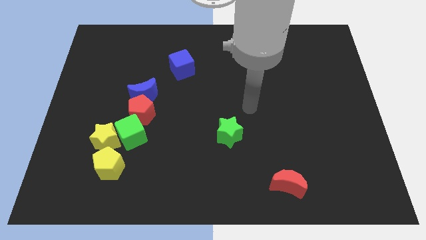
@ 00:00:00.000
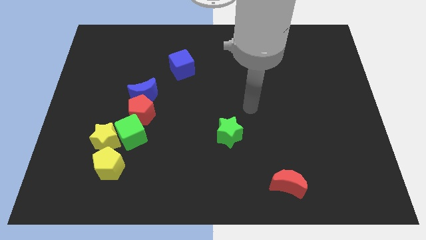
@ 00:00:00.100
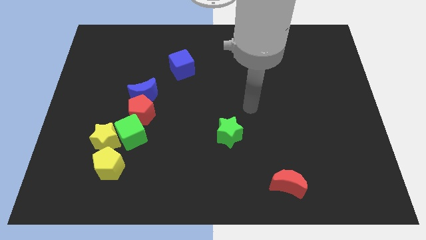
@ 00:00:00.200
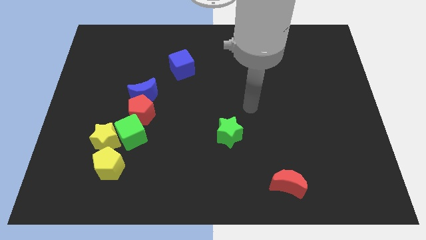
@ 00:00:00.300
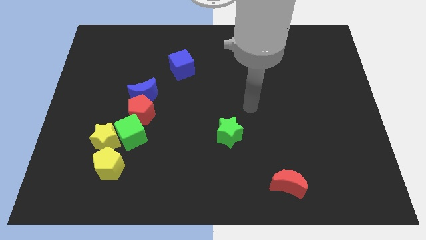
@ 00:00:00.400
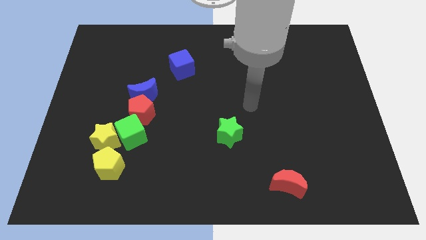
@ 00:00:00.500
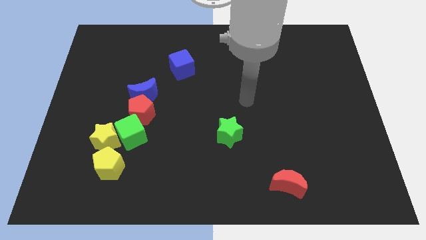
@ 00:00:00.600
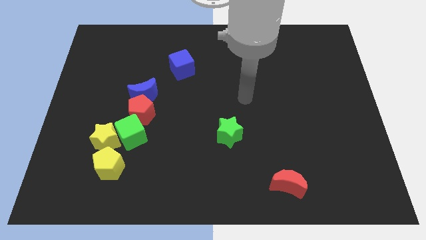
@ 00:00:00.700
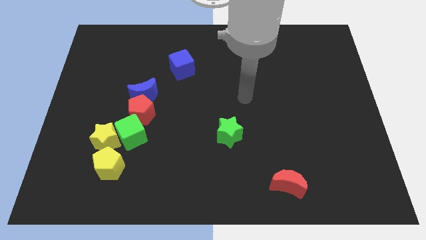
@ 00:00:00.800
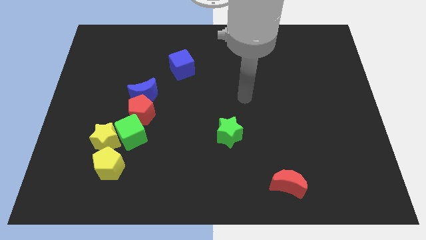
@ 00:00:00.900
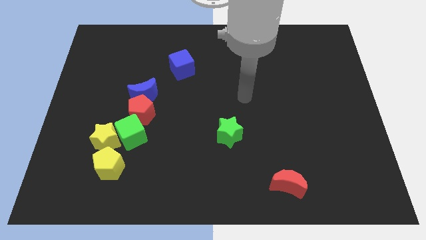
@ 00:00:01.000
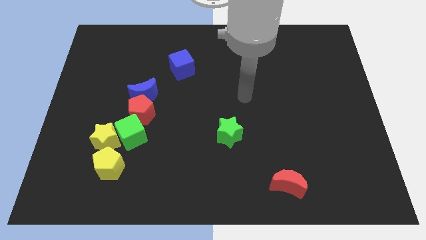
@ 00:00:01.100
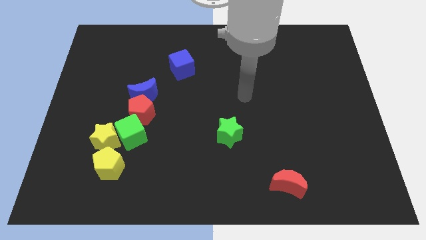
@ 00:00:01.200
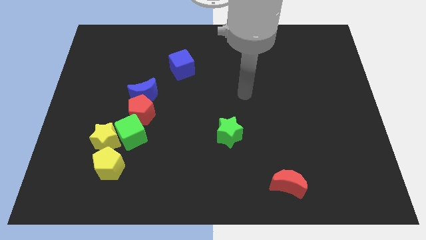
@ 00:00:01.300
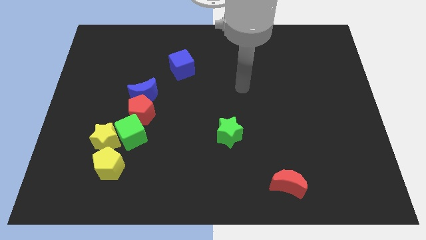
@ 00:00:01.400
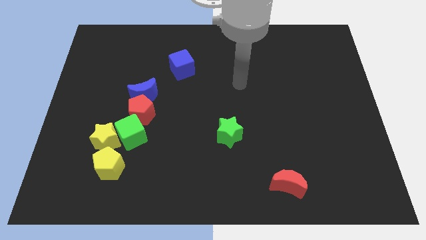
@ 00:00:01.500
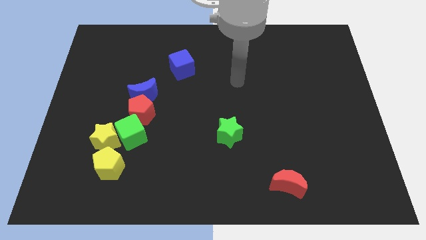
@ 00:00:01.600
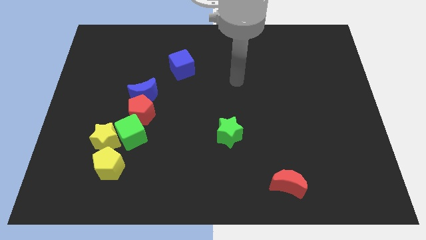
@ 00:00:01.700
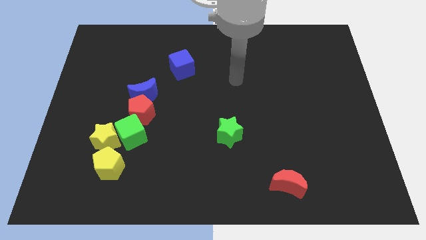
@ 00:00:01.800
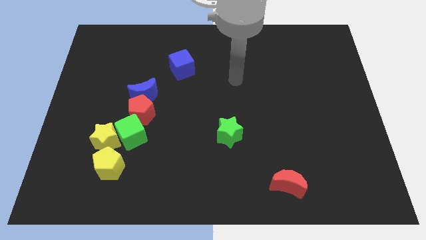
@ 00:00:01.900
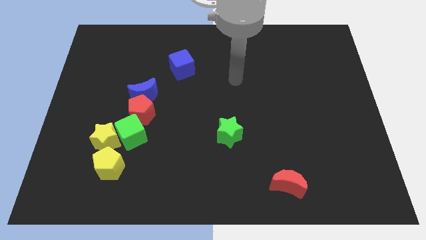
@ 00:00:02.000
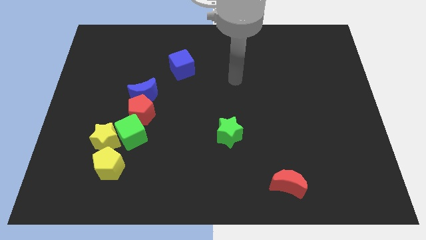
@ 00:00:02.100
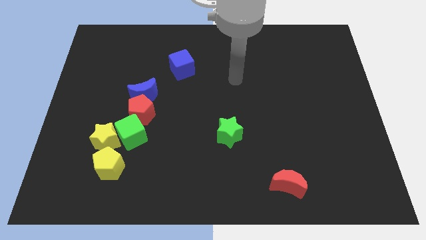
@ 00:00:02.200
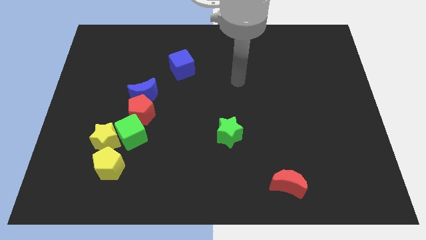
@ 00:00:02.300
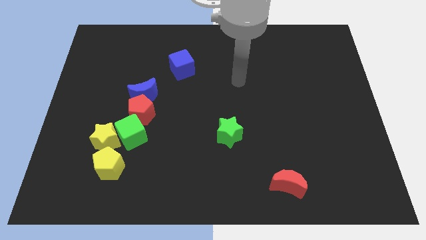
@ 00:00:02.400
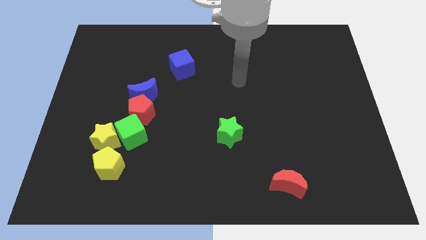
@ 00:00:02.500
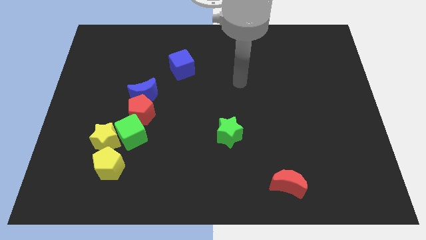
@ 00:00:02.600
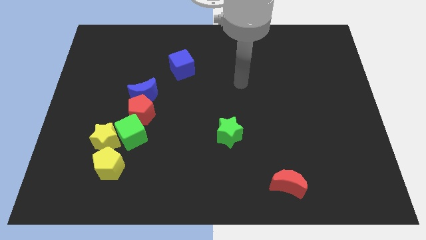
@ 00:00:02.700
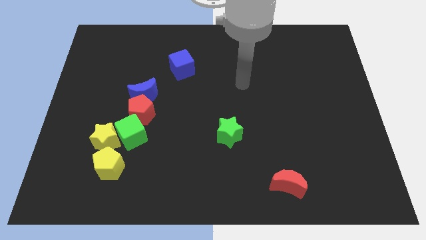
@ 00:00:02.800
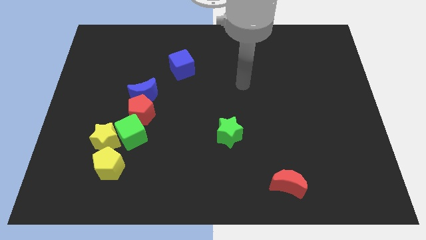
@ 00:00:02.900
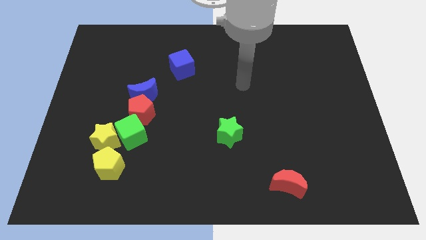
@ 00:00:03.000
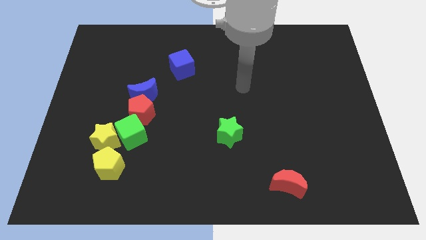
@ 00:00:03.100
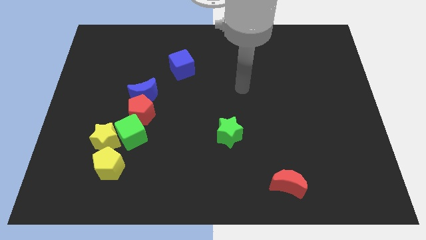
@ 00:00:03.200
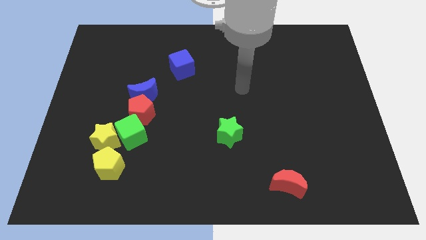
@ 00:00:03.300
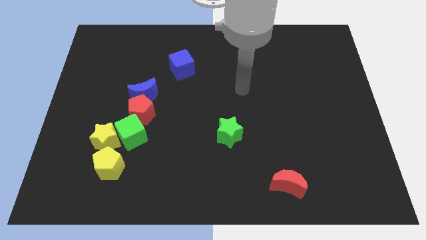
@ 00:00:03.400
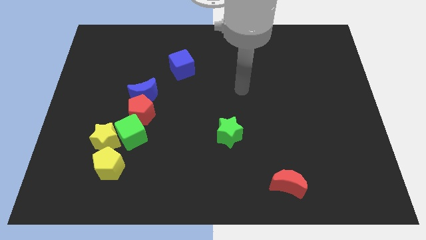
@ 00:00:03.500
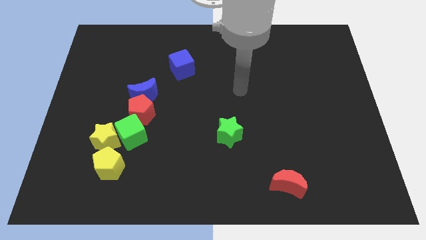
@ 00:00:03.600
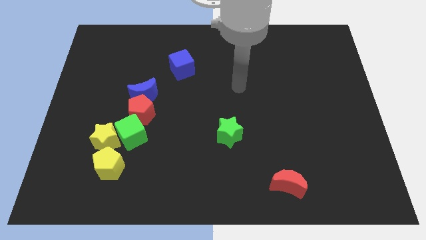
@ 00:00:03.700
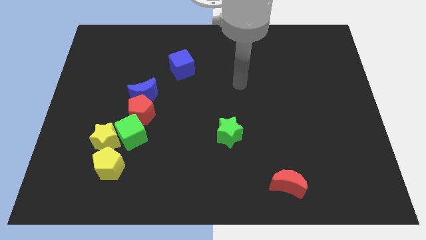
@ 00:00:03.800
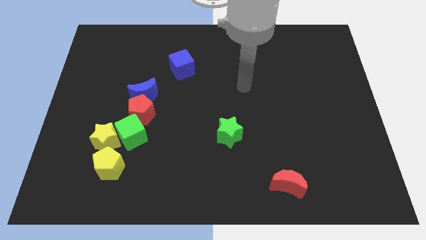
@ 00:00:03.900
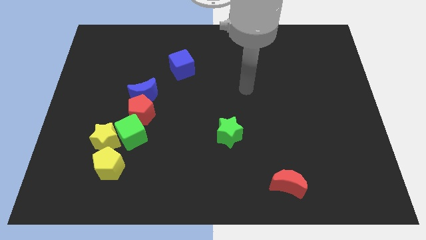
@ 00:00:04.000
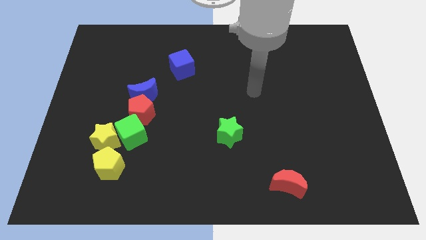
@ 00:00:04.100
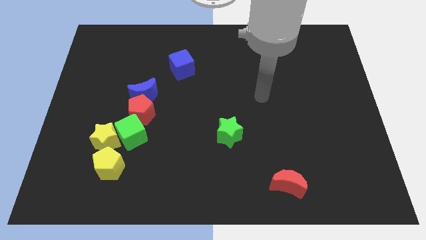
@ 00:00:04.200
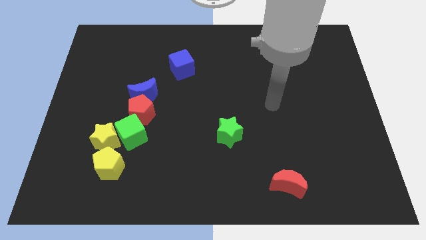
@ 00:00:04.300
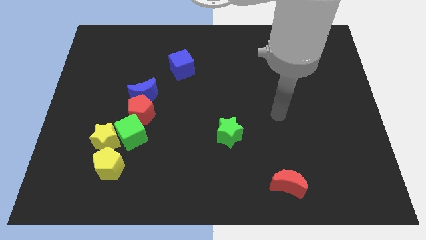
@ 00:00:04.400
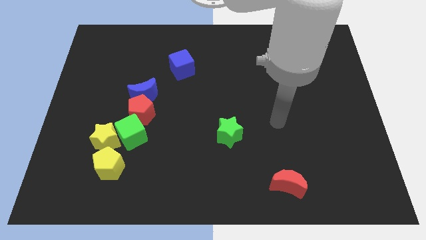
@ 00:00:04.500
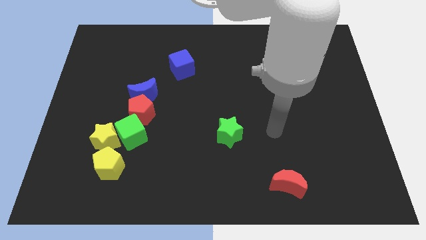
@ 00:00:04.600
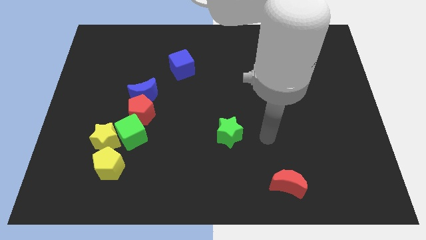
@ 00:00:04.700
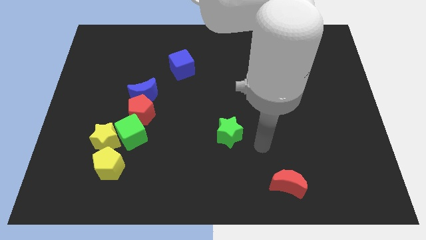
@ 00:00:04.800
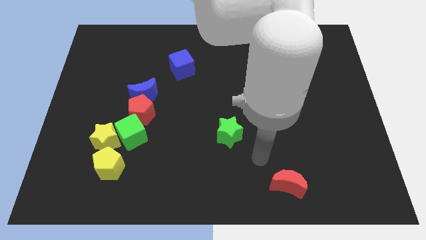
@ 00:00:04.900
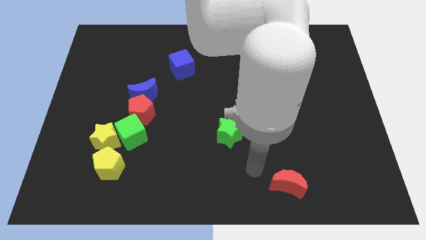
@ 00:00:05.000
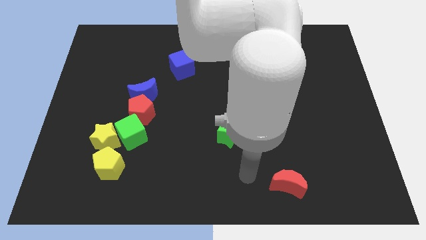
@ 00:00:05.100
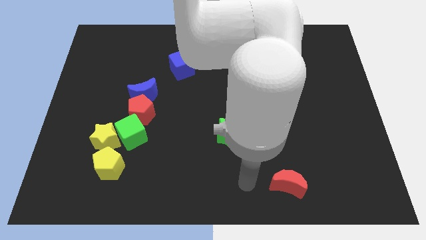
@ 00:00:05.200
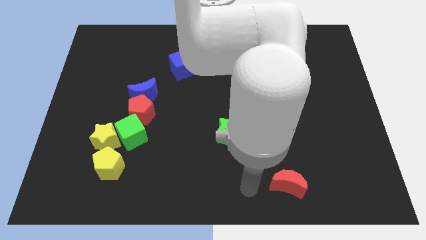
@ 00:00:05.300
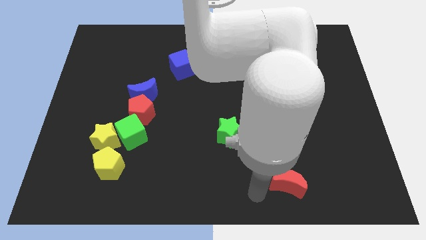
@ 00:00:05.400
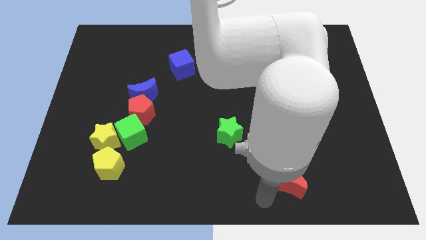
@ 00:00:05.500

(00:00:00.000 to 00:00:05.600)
move arm near red moon

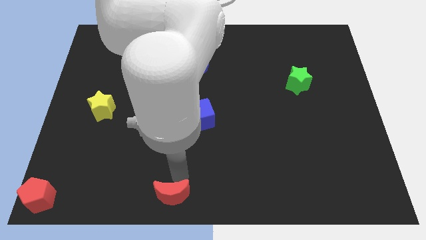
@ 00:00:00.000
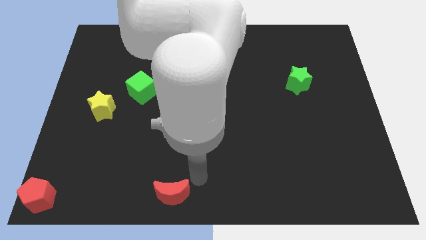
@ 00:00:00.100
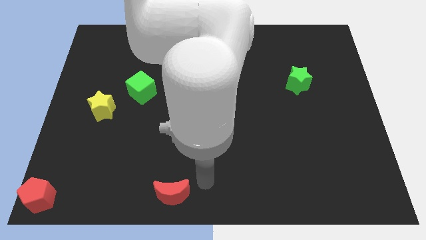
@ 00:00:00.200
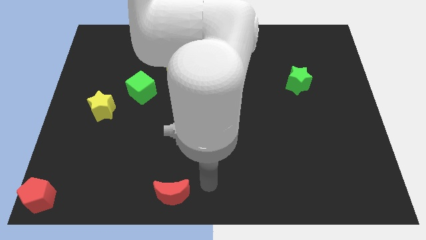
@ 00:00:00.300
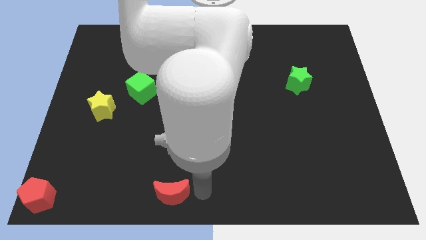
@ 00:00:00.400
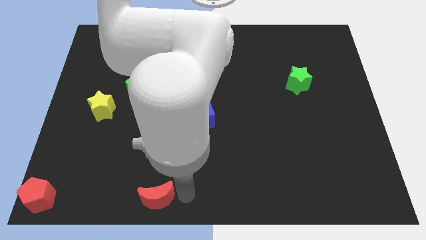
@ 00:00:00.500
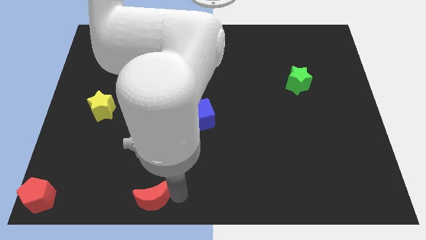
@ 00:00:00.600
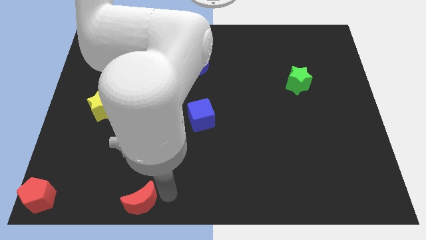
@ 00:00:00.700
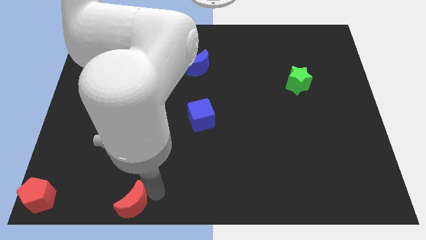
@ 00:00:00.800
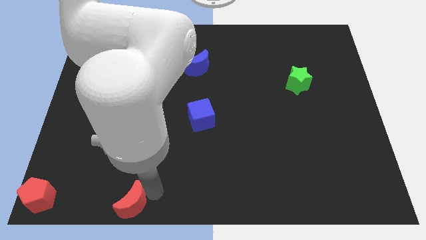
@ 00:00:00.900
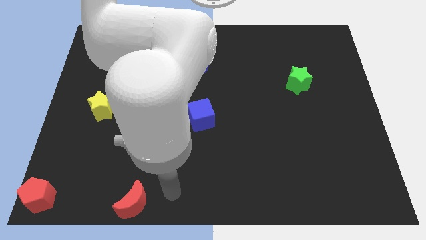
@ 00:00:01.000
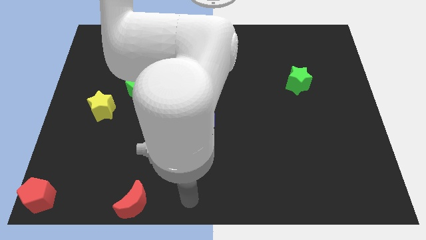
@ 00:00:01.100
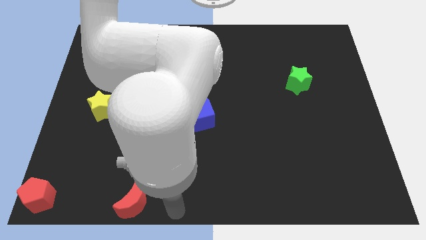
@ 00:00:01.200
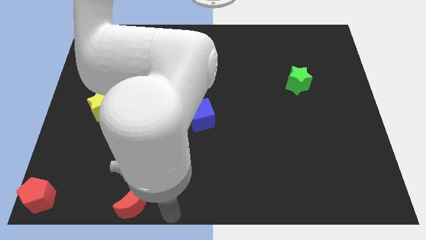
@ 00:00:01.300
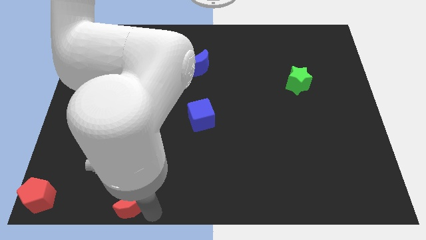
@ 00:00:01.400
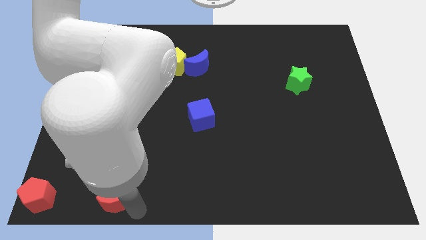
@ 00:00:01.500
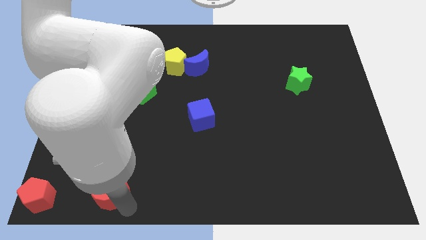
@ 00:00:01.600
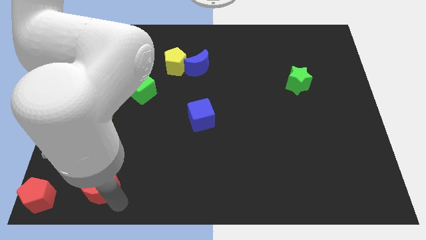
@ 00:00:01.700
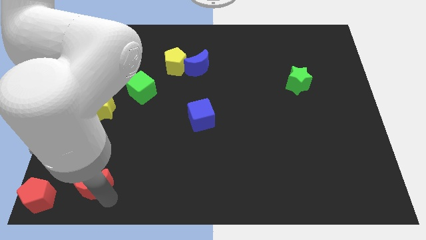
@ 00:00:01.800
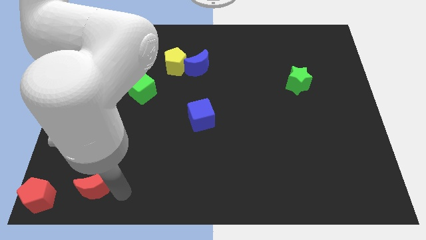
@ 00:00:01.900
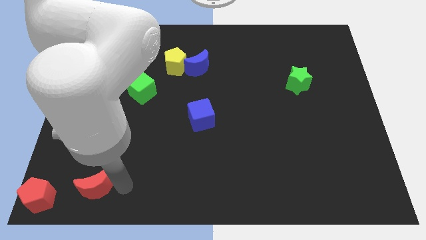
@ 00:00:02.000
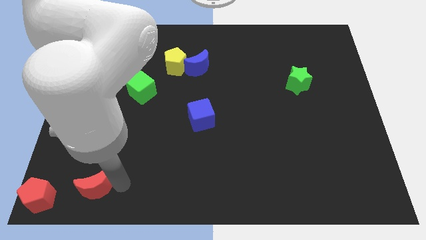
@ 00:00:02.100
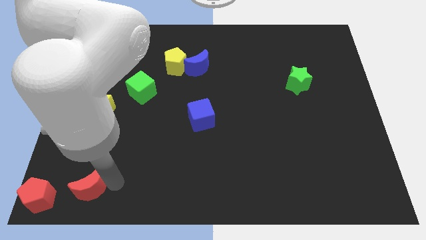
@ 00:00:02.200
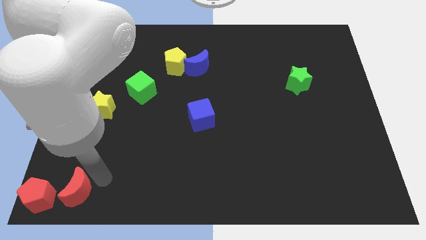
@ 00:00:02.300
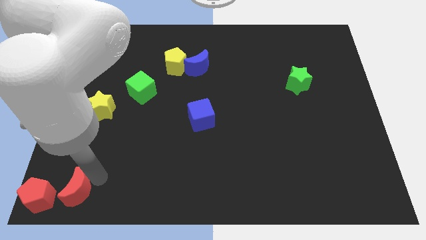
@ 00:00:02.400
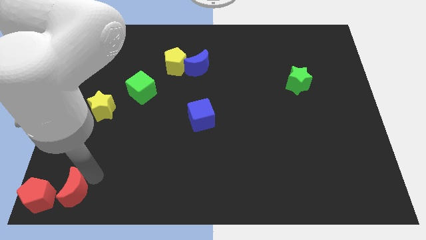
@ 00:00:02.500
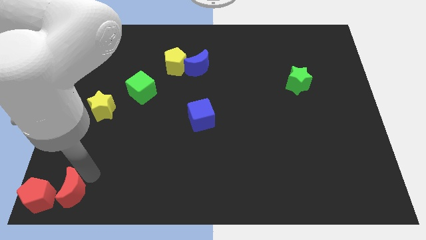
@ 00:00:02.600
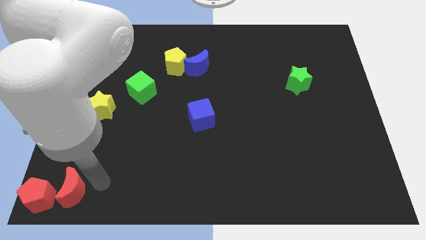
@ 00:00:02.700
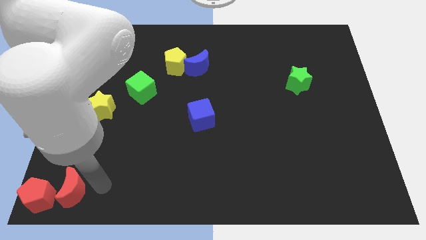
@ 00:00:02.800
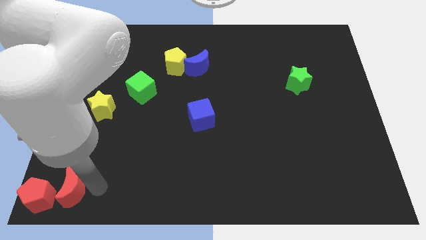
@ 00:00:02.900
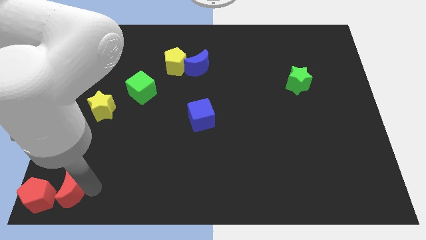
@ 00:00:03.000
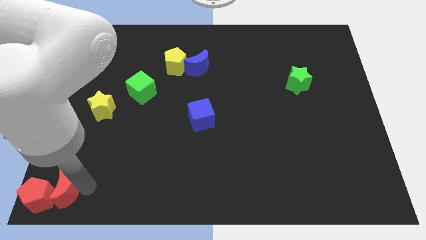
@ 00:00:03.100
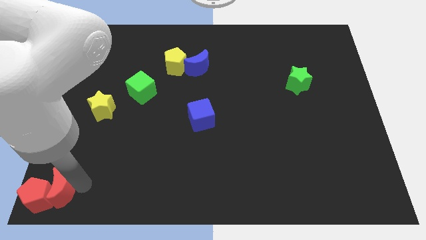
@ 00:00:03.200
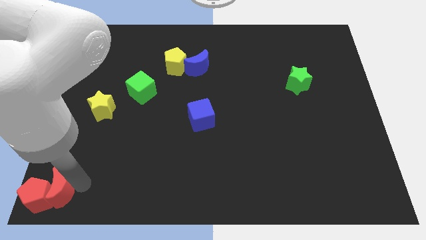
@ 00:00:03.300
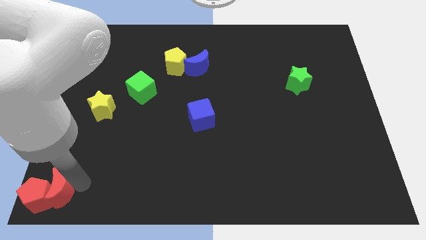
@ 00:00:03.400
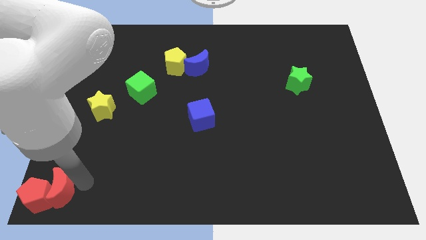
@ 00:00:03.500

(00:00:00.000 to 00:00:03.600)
push the red moon at the right side of the red pentagon
